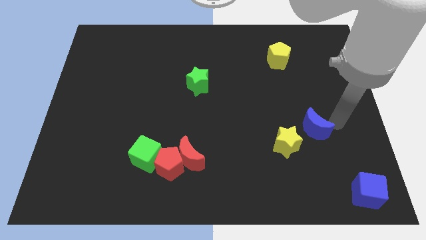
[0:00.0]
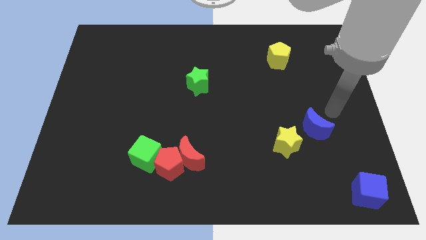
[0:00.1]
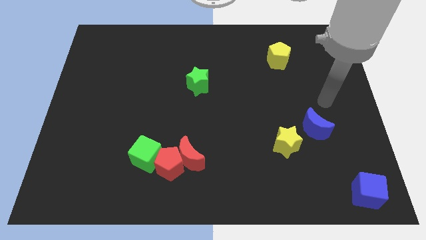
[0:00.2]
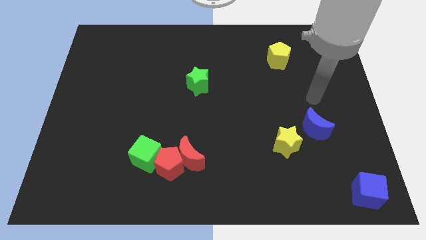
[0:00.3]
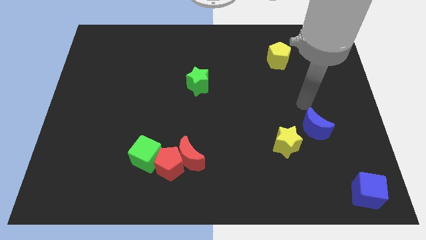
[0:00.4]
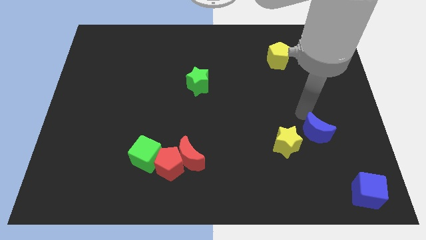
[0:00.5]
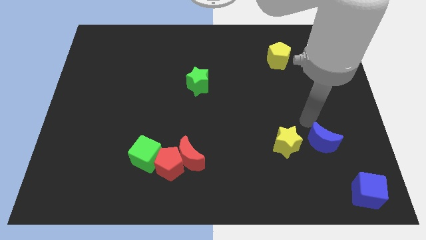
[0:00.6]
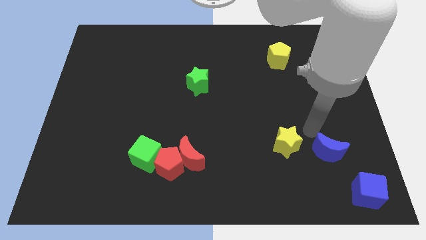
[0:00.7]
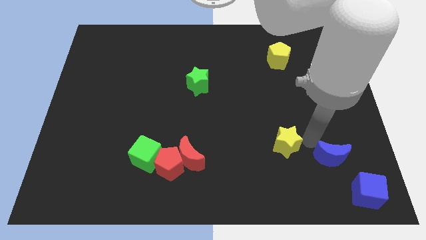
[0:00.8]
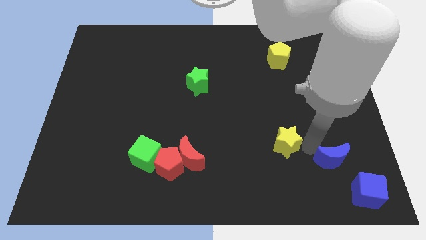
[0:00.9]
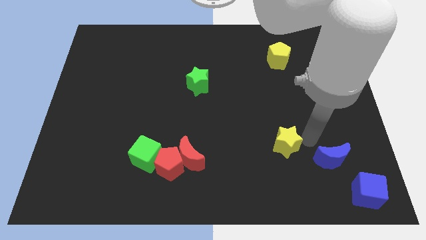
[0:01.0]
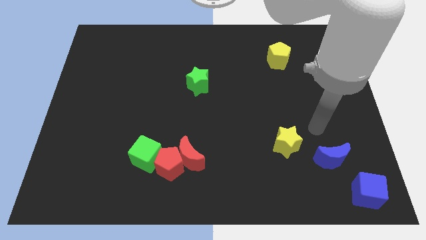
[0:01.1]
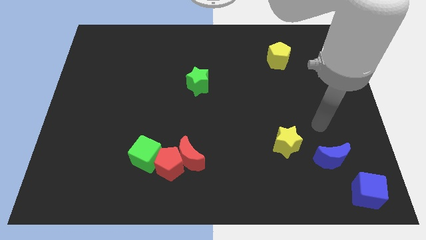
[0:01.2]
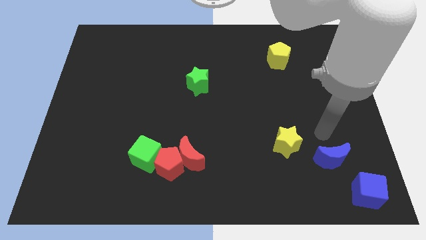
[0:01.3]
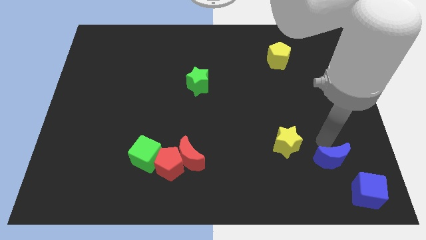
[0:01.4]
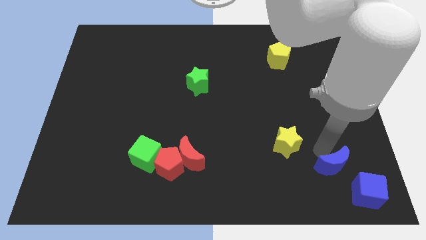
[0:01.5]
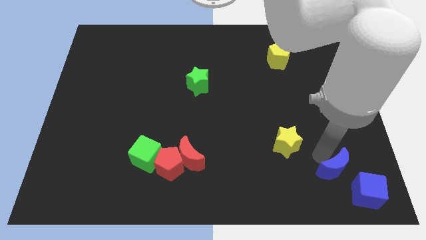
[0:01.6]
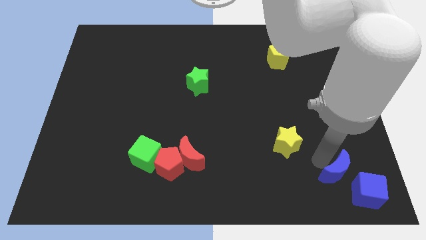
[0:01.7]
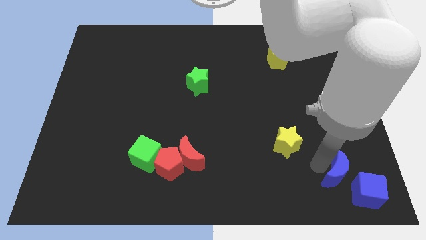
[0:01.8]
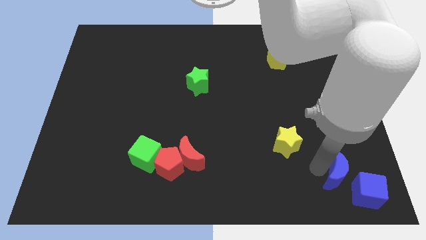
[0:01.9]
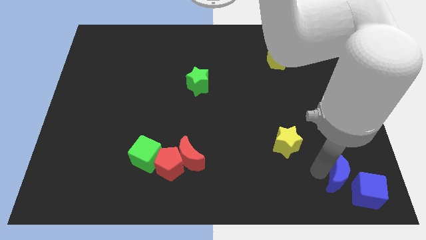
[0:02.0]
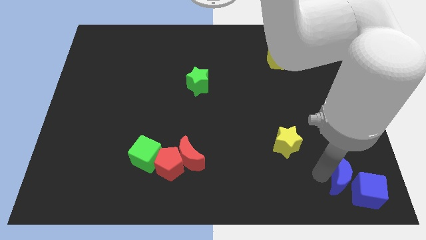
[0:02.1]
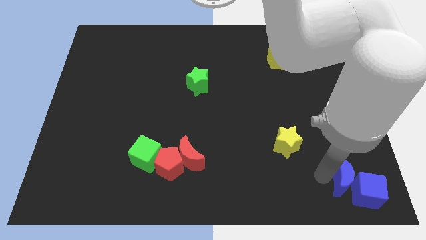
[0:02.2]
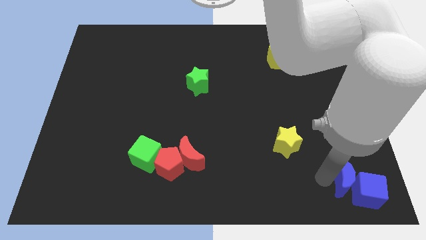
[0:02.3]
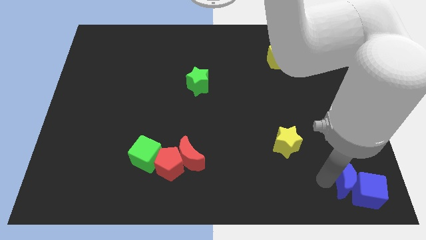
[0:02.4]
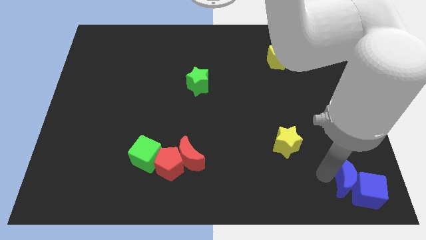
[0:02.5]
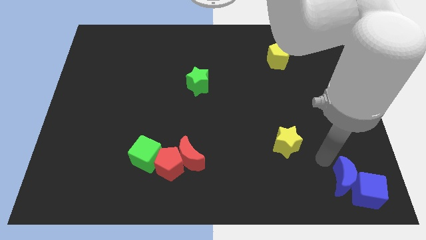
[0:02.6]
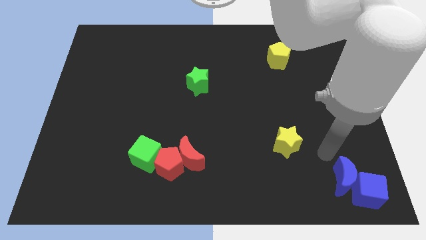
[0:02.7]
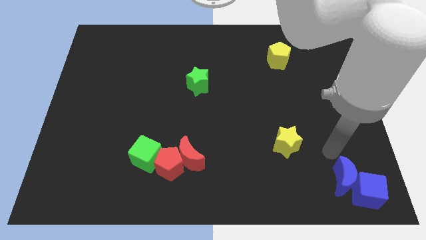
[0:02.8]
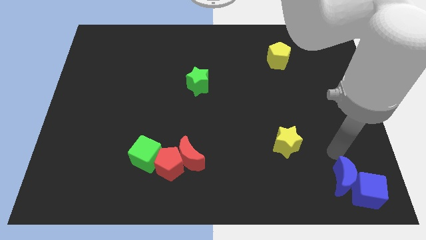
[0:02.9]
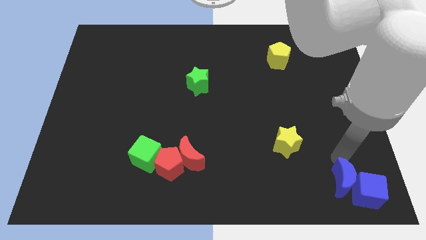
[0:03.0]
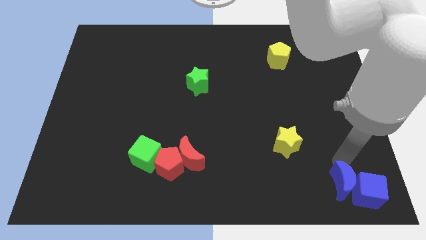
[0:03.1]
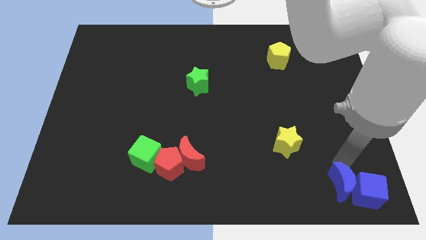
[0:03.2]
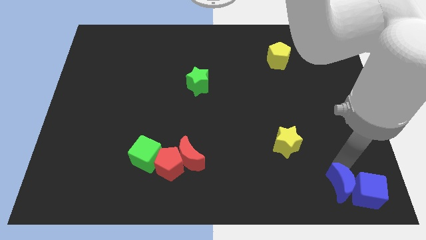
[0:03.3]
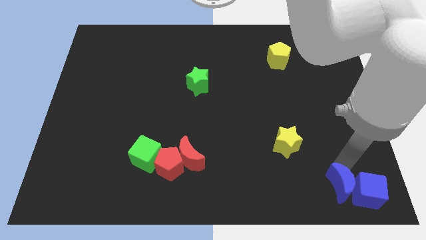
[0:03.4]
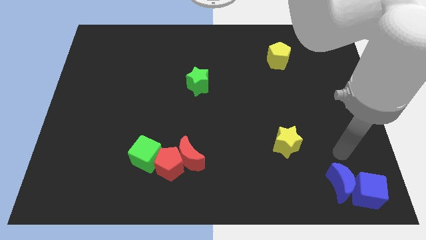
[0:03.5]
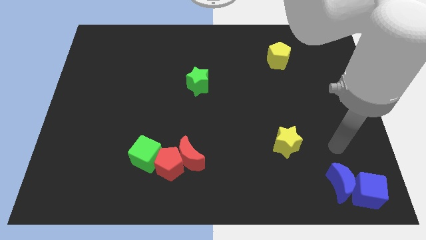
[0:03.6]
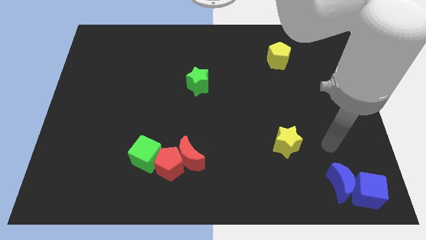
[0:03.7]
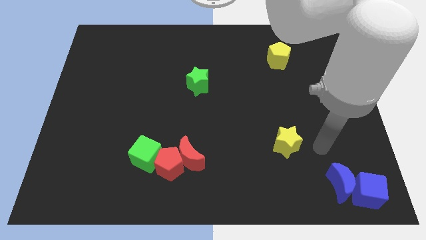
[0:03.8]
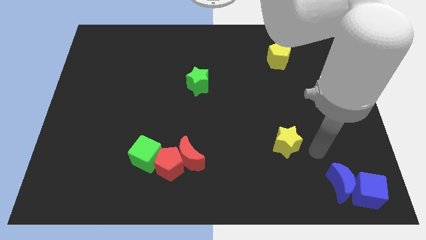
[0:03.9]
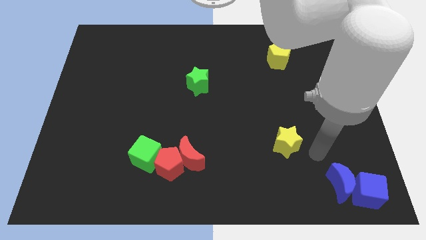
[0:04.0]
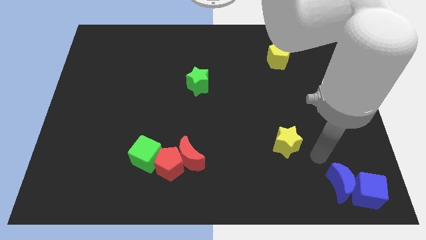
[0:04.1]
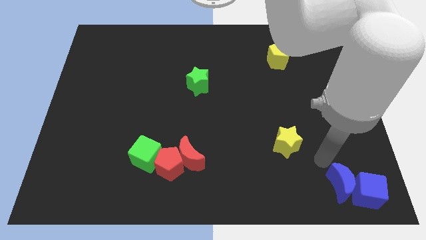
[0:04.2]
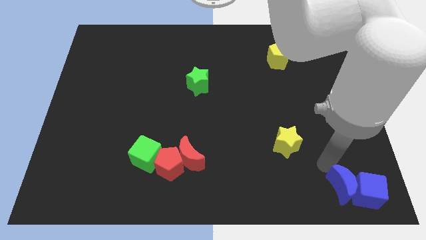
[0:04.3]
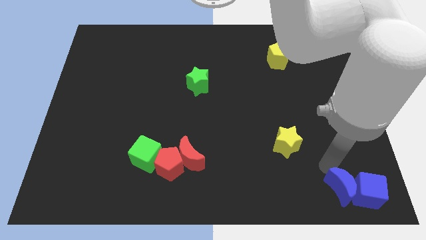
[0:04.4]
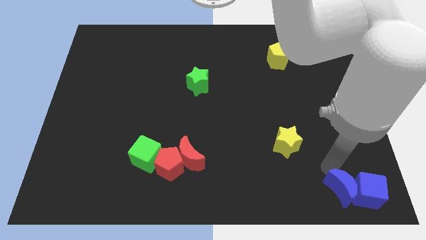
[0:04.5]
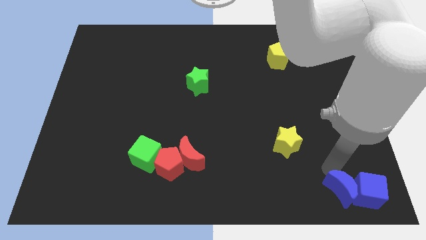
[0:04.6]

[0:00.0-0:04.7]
place the blue moon to the left of the blue cube

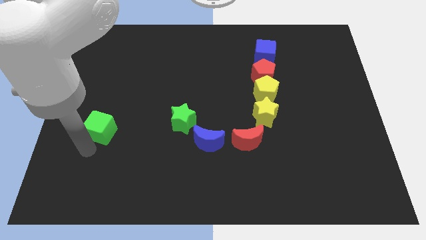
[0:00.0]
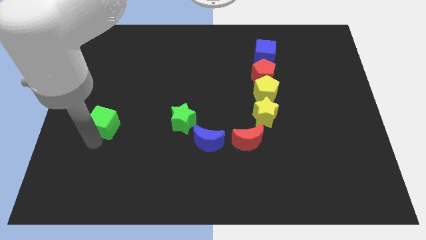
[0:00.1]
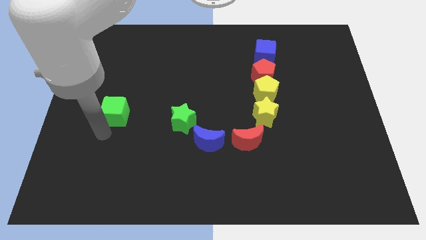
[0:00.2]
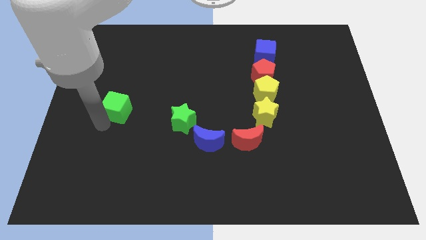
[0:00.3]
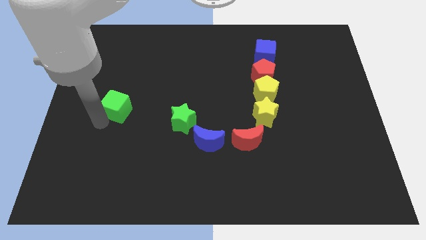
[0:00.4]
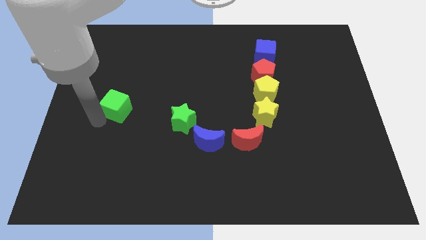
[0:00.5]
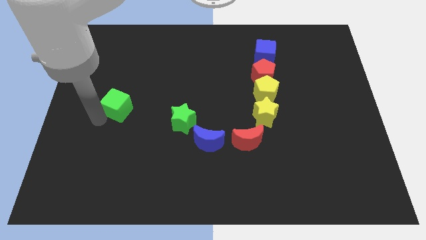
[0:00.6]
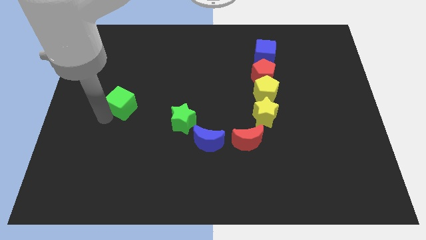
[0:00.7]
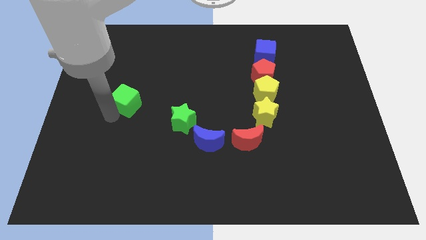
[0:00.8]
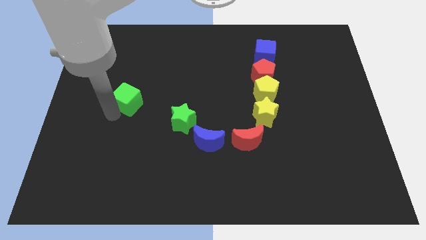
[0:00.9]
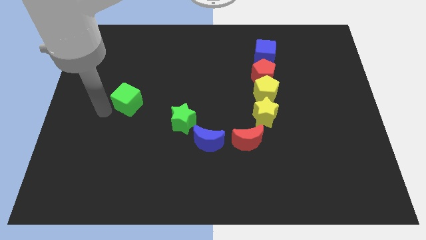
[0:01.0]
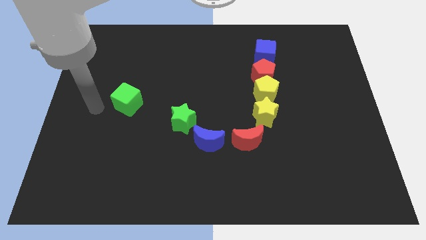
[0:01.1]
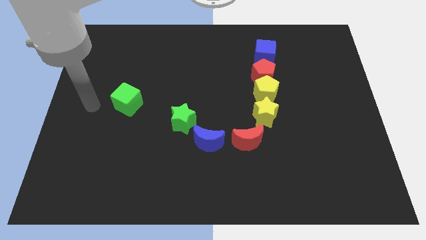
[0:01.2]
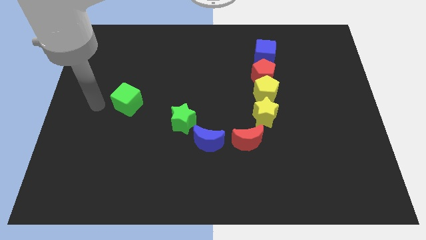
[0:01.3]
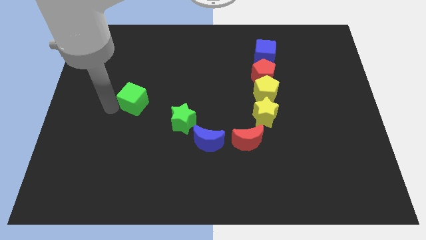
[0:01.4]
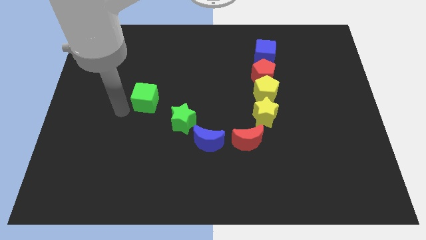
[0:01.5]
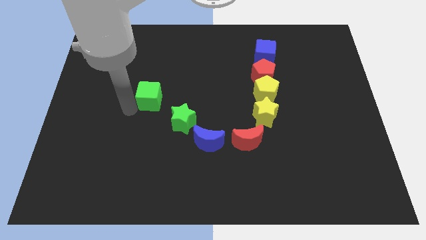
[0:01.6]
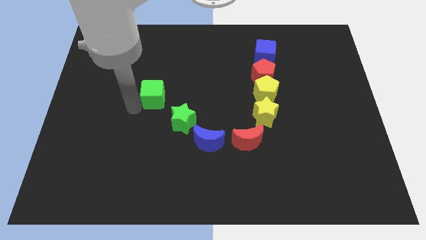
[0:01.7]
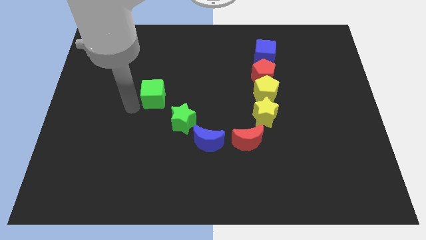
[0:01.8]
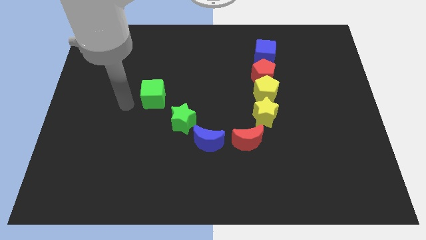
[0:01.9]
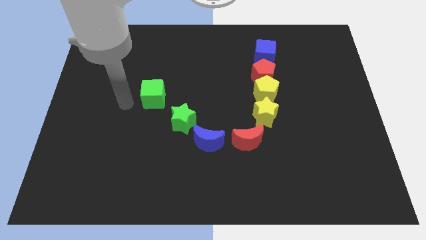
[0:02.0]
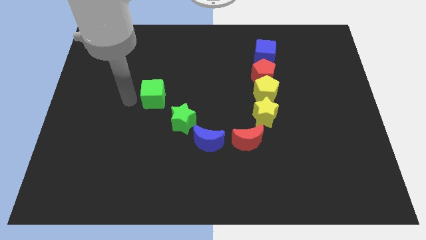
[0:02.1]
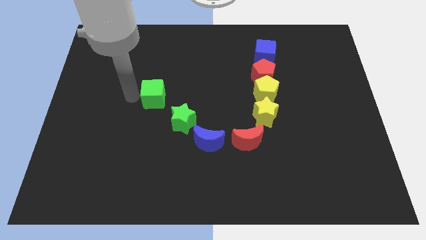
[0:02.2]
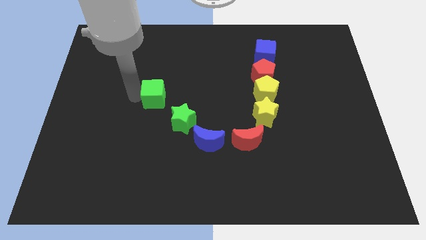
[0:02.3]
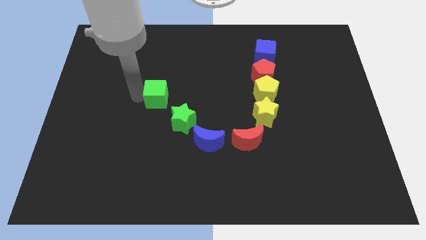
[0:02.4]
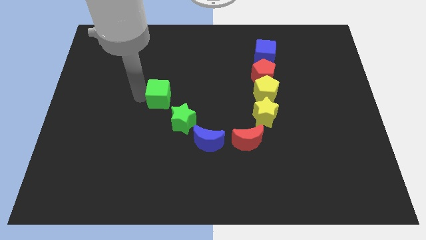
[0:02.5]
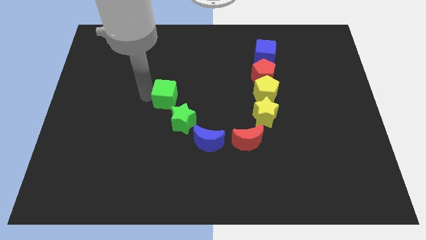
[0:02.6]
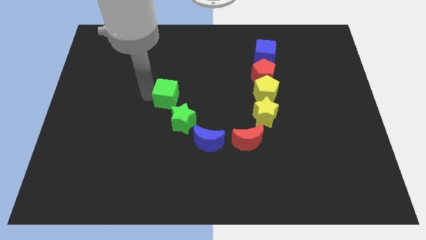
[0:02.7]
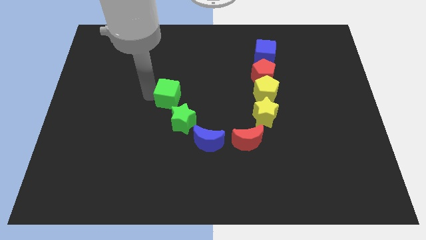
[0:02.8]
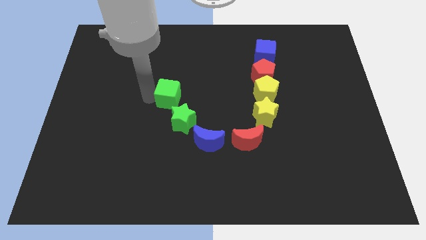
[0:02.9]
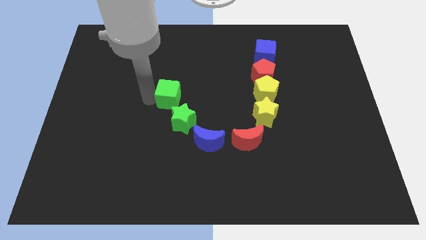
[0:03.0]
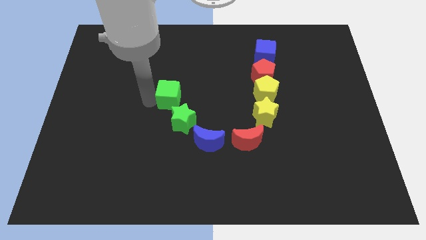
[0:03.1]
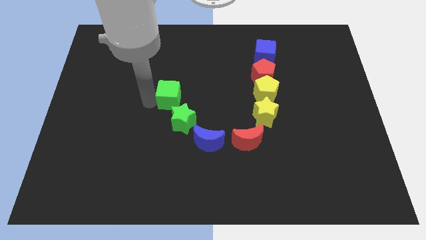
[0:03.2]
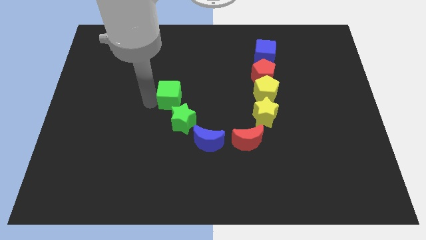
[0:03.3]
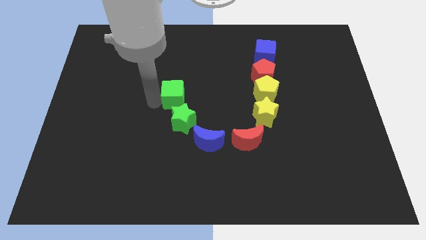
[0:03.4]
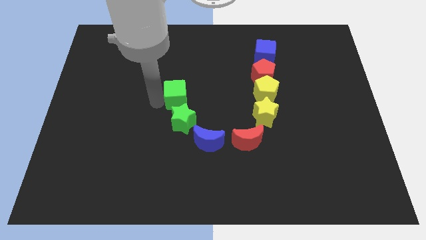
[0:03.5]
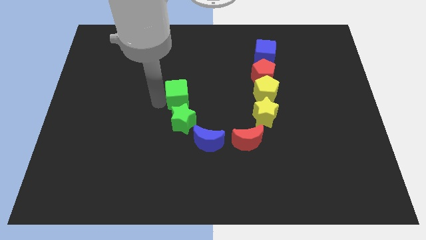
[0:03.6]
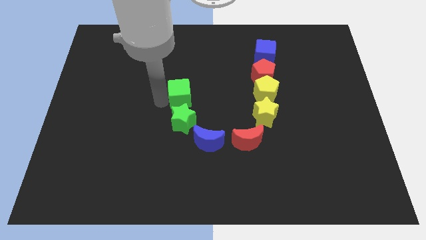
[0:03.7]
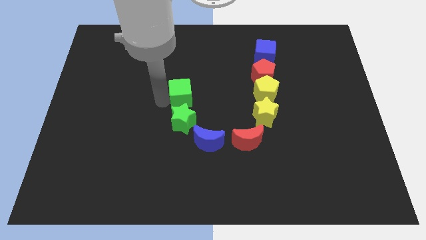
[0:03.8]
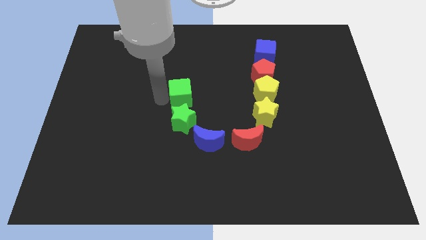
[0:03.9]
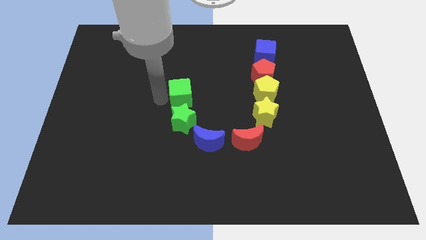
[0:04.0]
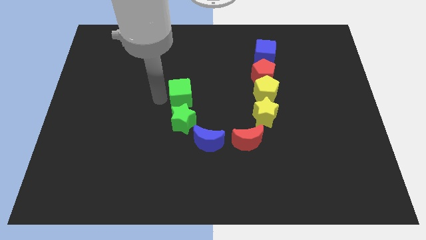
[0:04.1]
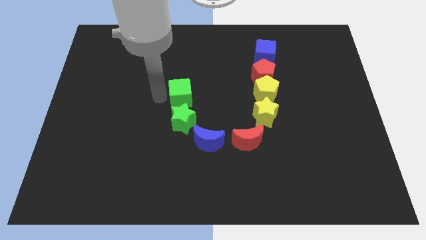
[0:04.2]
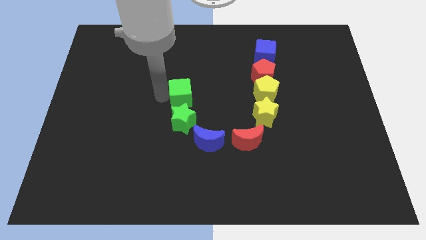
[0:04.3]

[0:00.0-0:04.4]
place the green cube beside the green star
